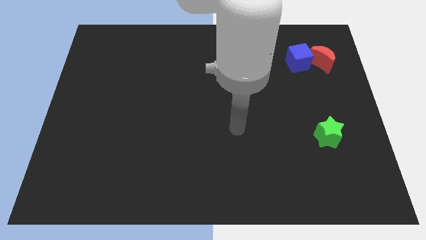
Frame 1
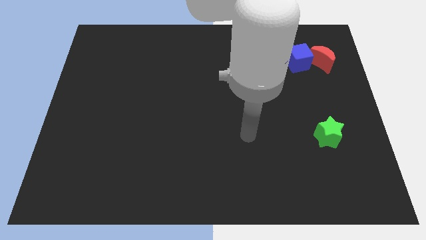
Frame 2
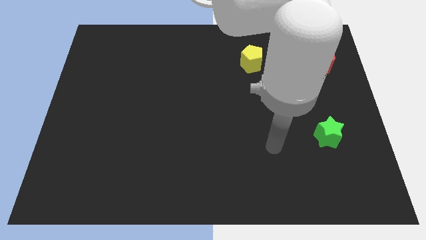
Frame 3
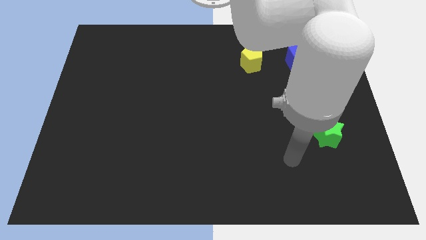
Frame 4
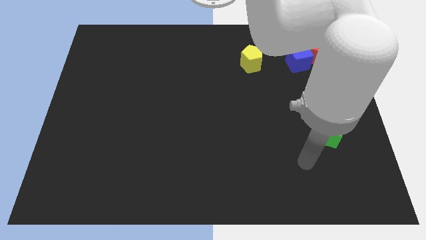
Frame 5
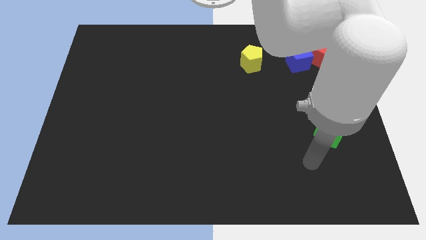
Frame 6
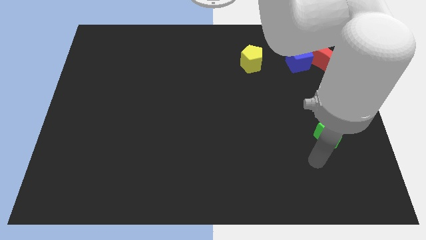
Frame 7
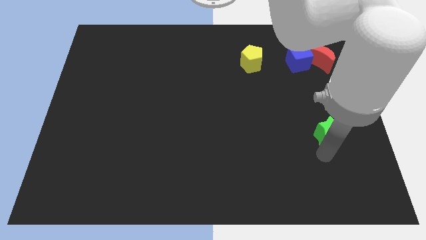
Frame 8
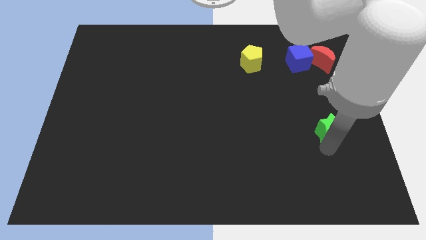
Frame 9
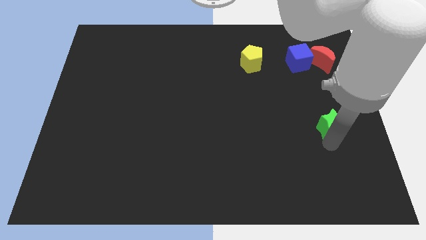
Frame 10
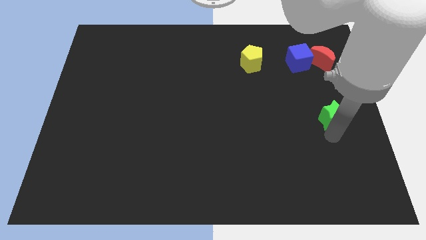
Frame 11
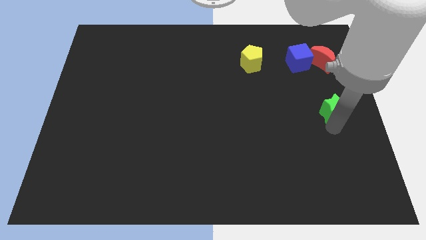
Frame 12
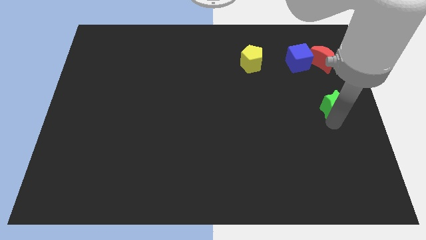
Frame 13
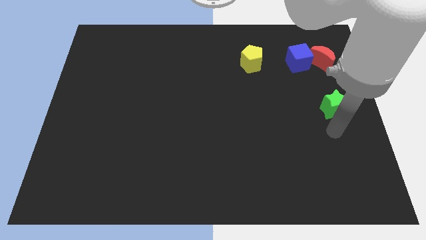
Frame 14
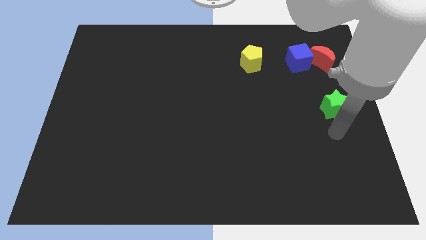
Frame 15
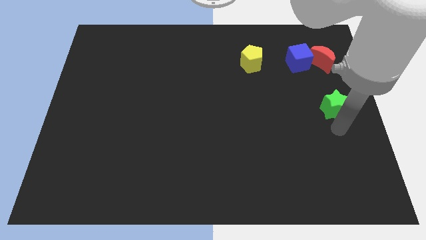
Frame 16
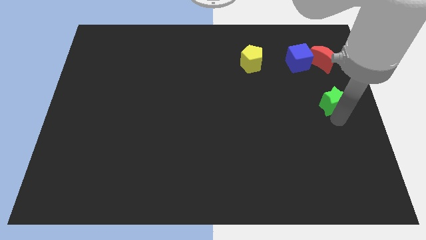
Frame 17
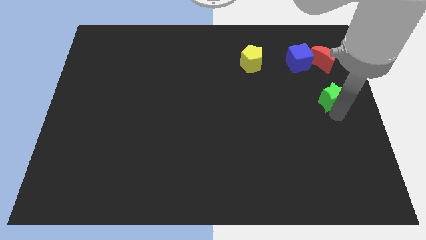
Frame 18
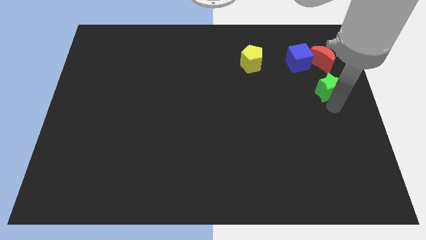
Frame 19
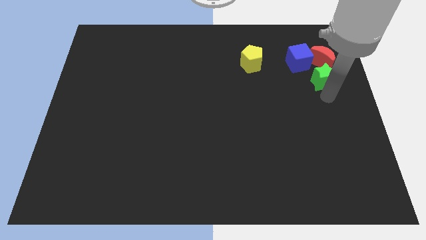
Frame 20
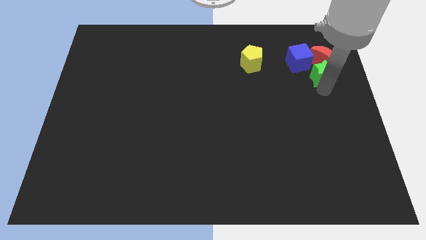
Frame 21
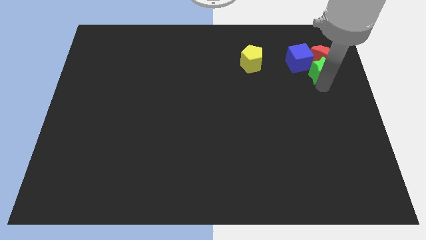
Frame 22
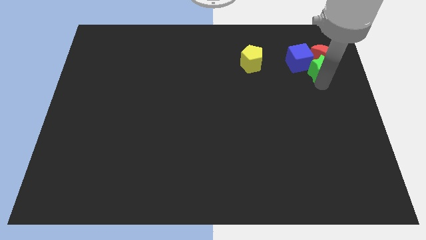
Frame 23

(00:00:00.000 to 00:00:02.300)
slide the green block to the moon

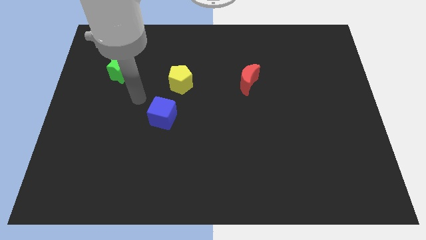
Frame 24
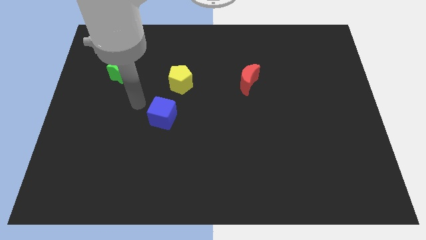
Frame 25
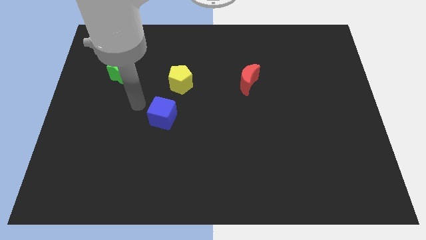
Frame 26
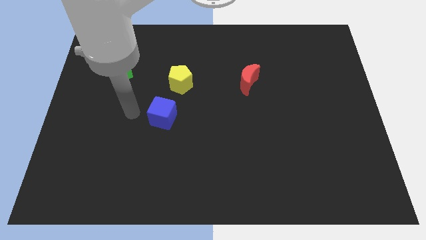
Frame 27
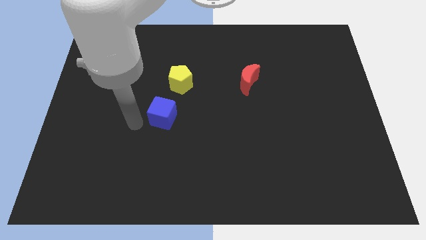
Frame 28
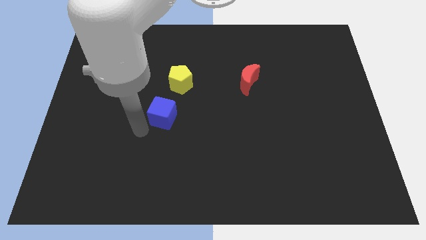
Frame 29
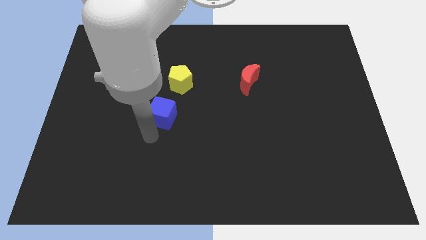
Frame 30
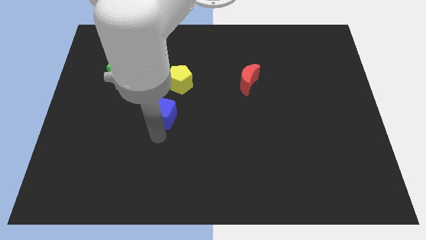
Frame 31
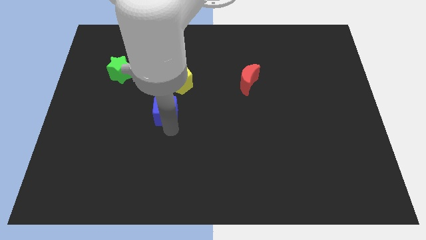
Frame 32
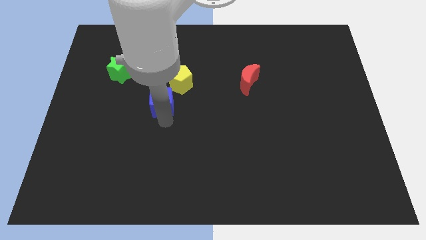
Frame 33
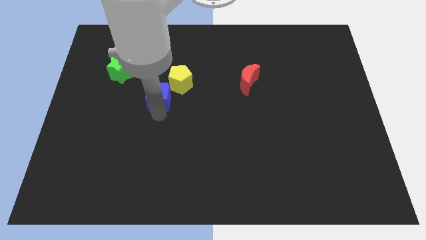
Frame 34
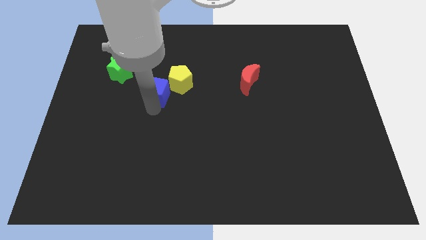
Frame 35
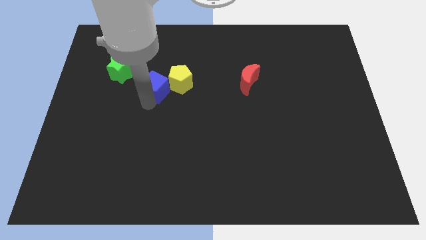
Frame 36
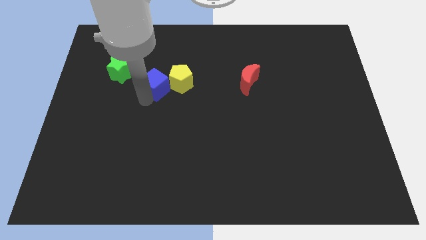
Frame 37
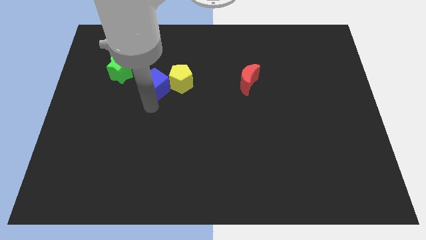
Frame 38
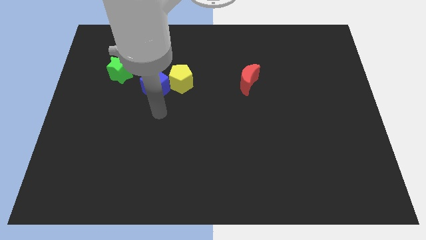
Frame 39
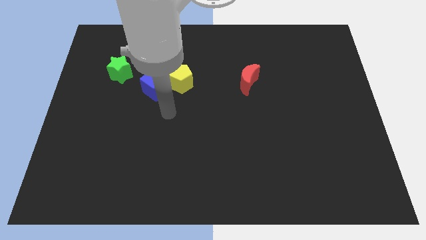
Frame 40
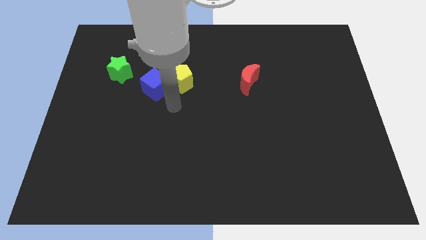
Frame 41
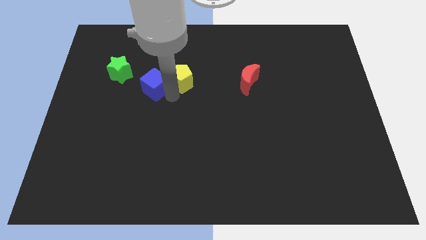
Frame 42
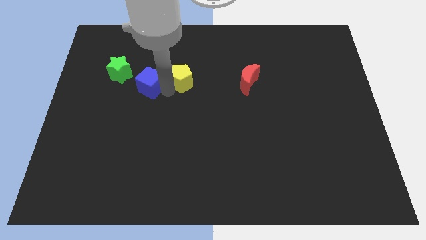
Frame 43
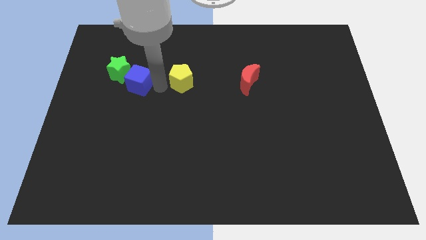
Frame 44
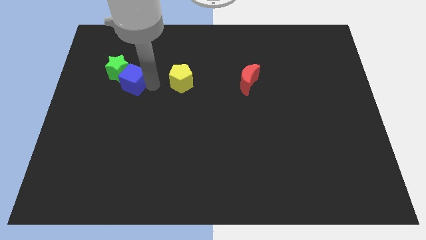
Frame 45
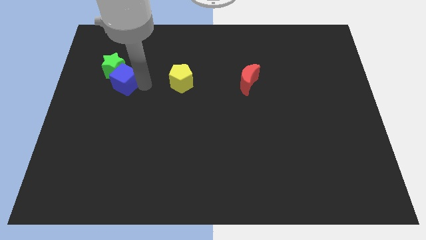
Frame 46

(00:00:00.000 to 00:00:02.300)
put the blue cube next to the green block

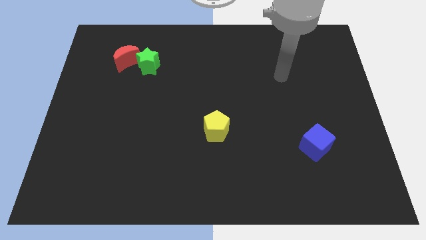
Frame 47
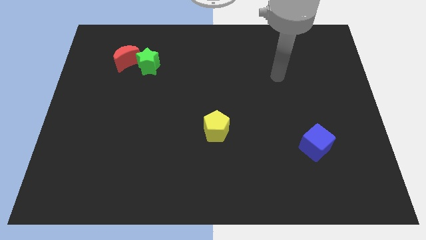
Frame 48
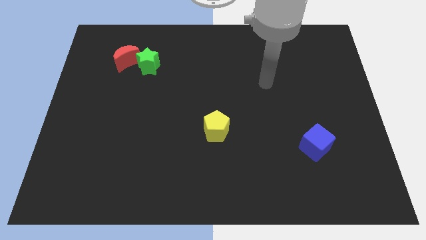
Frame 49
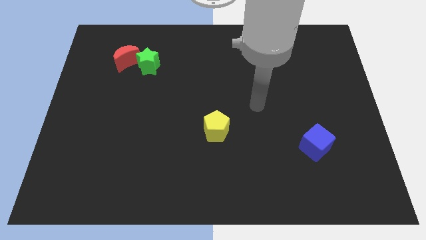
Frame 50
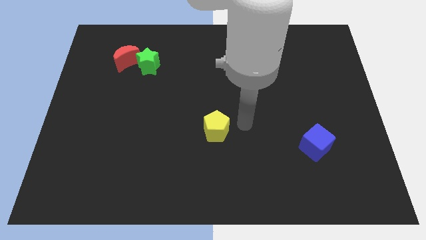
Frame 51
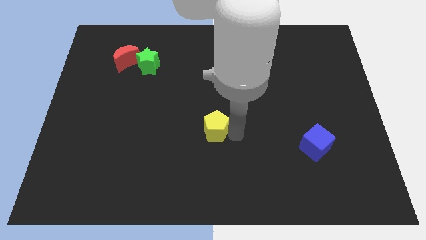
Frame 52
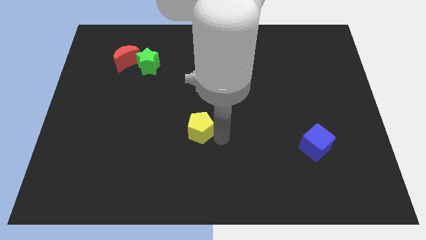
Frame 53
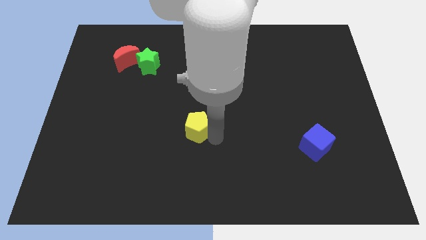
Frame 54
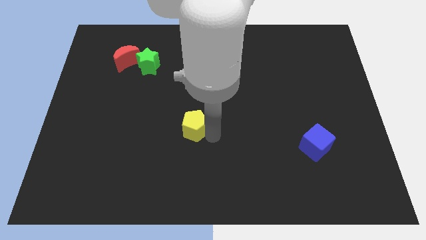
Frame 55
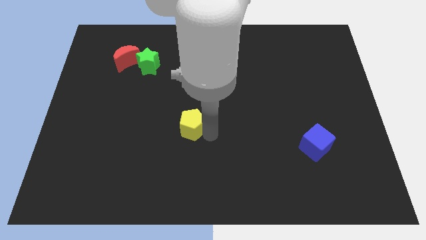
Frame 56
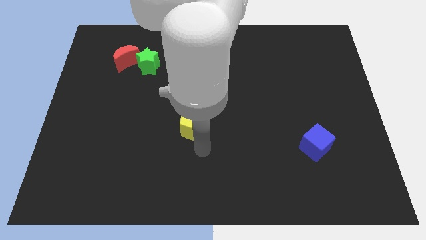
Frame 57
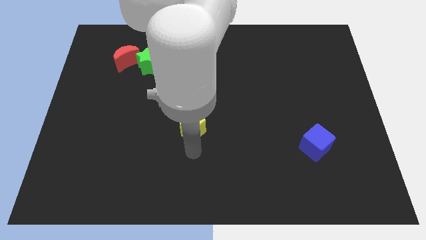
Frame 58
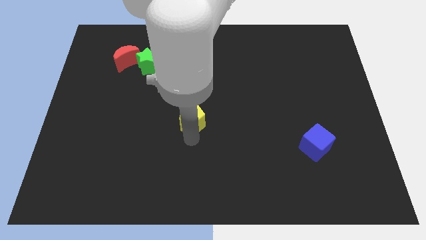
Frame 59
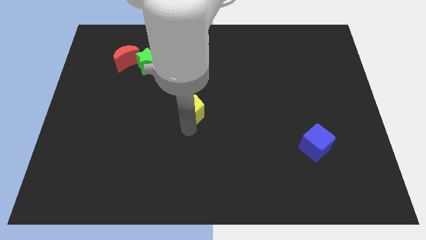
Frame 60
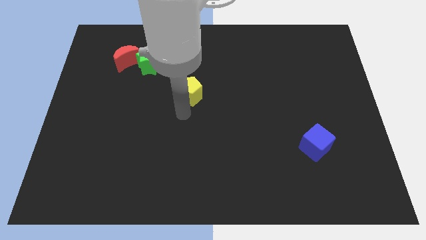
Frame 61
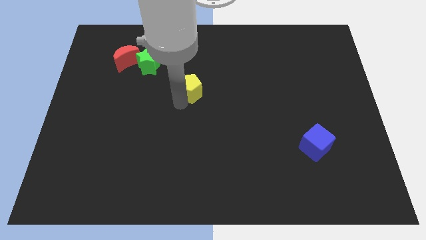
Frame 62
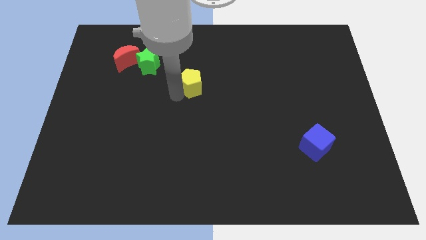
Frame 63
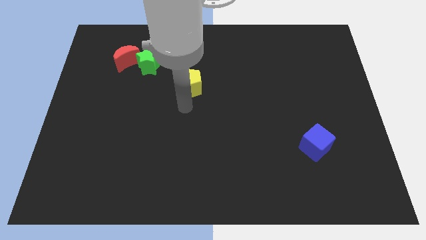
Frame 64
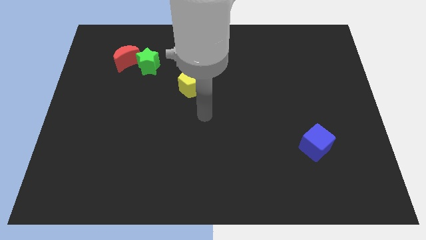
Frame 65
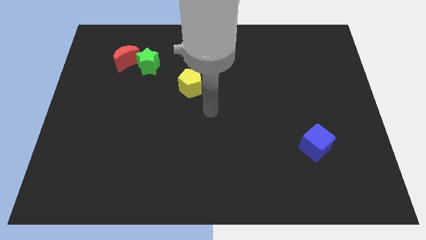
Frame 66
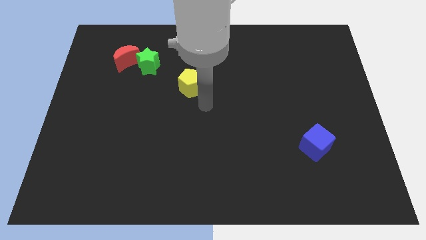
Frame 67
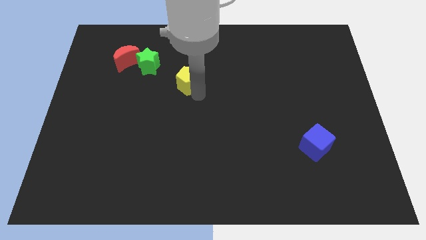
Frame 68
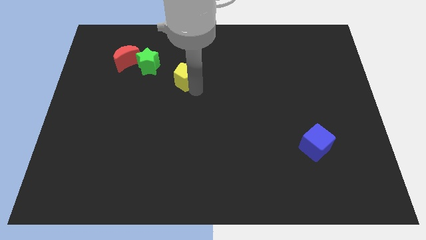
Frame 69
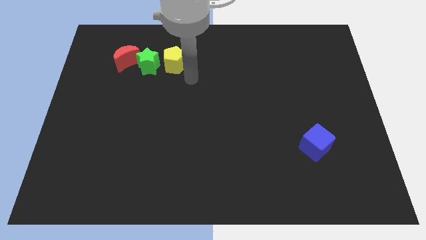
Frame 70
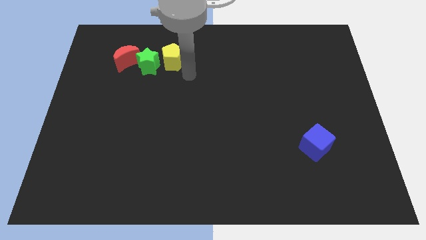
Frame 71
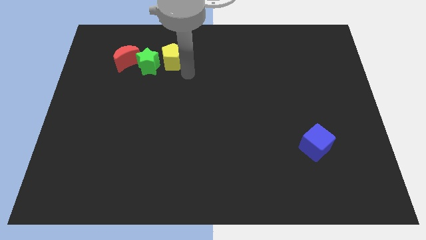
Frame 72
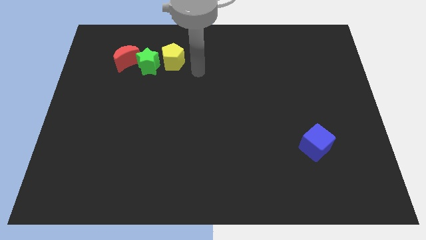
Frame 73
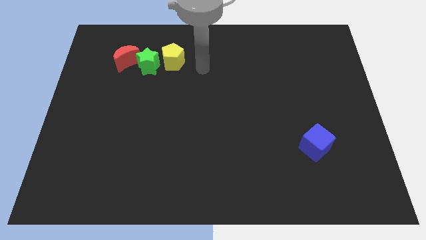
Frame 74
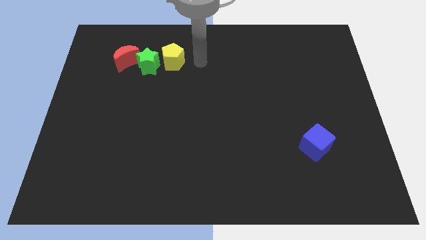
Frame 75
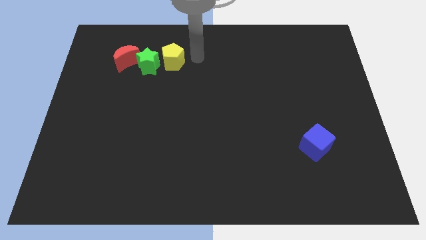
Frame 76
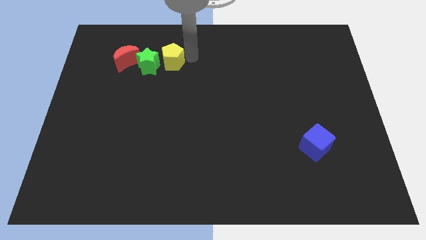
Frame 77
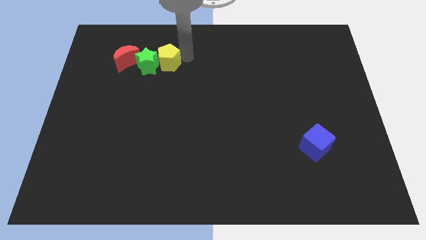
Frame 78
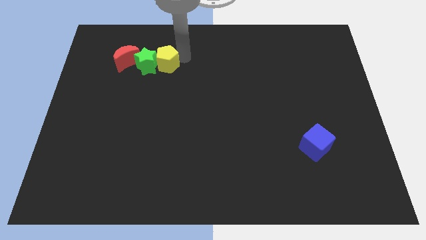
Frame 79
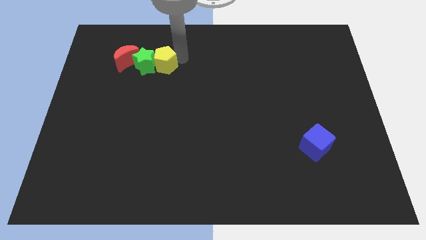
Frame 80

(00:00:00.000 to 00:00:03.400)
move the pentagon towards the green star

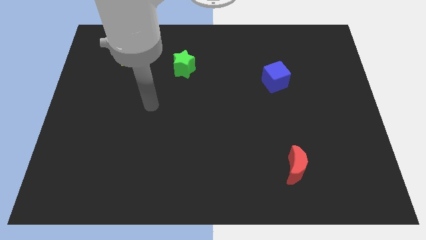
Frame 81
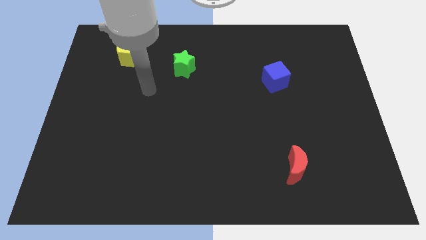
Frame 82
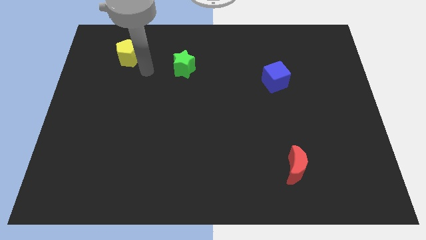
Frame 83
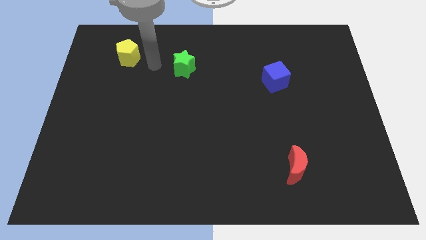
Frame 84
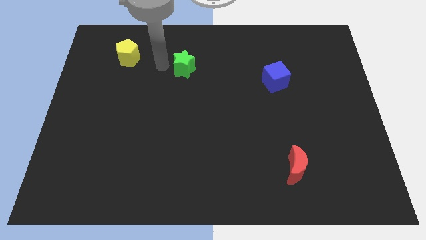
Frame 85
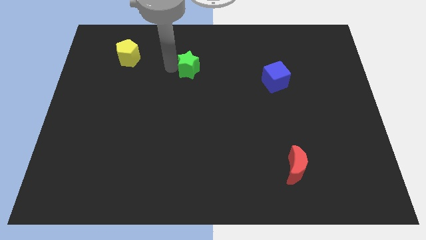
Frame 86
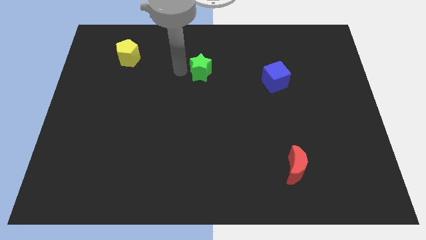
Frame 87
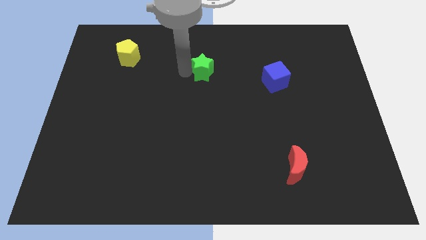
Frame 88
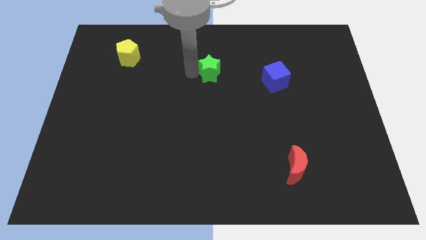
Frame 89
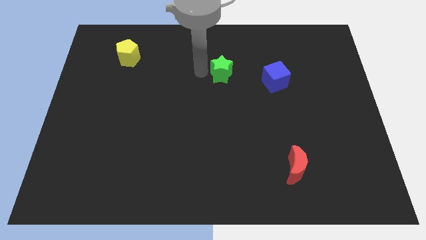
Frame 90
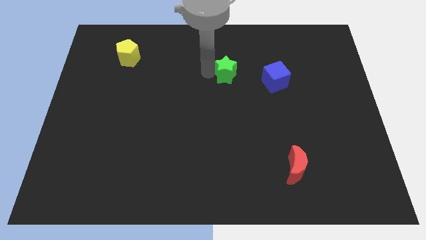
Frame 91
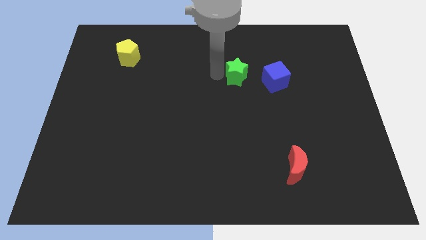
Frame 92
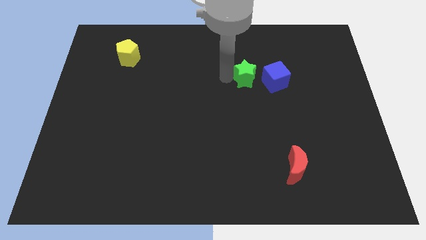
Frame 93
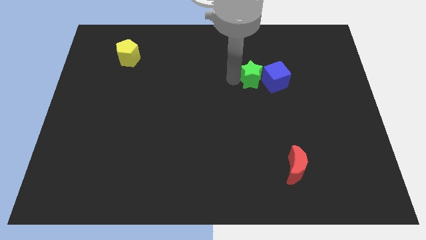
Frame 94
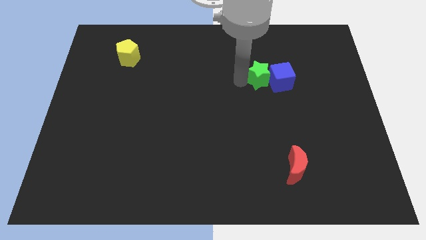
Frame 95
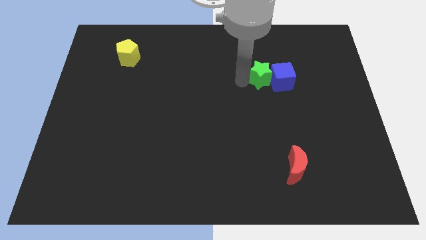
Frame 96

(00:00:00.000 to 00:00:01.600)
move the star next to the blue cube
